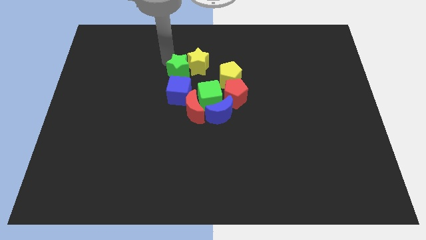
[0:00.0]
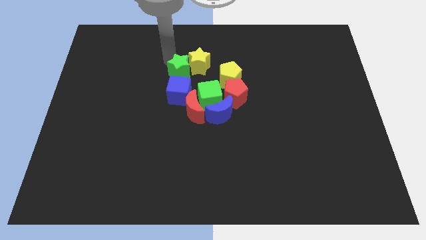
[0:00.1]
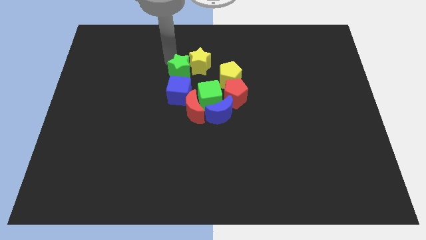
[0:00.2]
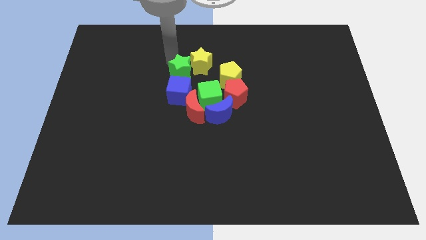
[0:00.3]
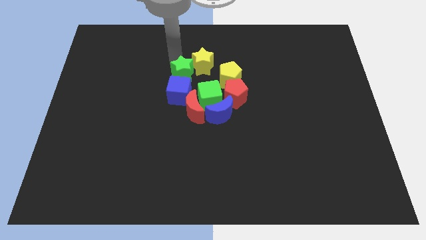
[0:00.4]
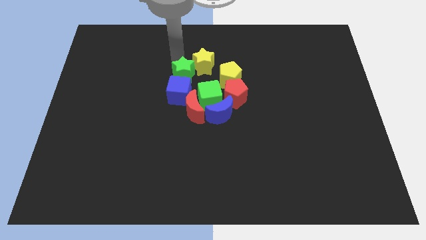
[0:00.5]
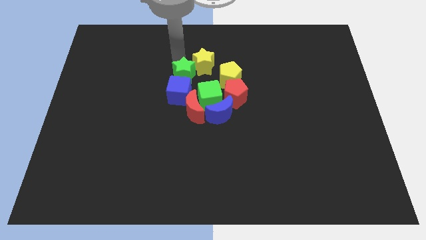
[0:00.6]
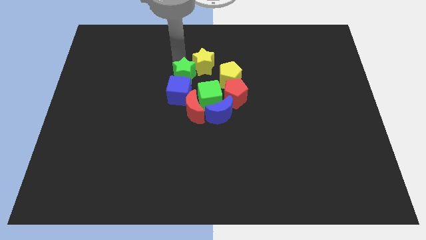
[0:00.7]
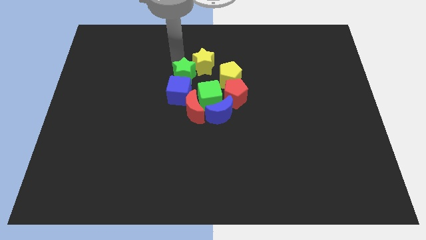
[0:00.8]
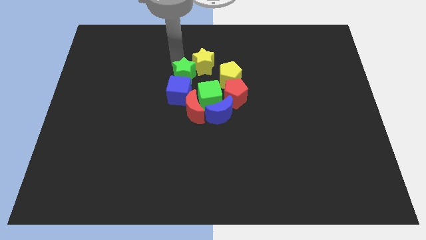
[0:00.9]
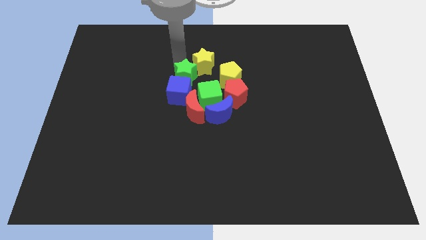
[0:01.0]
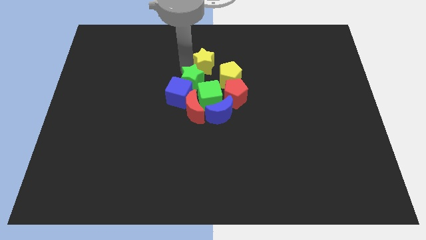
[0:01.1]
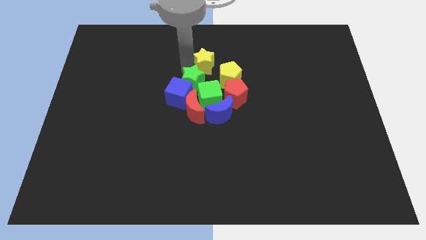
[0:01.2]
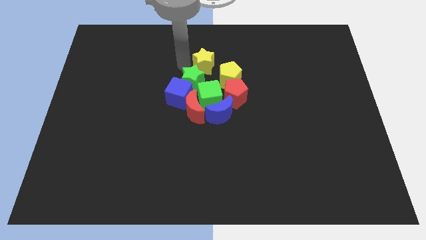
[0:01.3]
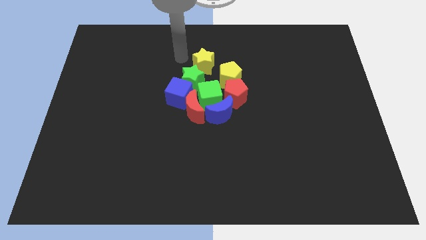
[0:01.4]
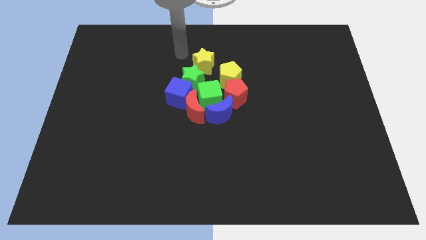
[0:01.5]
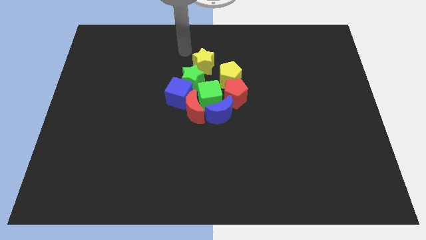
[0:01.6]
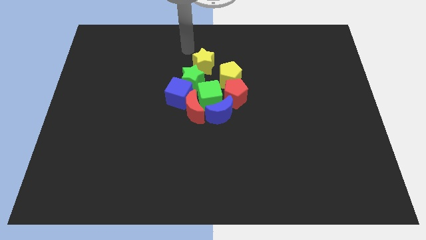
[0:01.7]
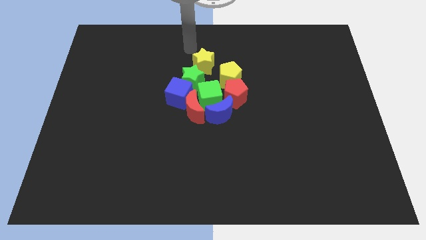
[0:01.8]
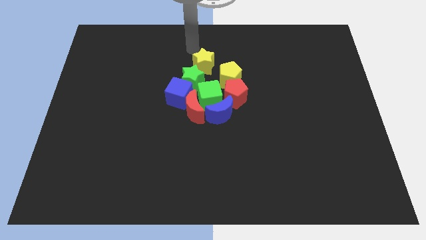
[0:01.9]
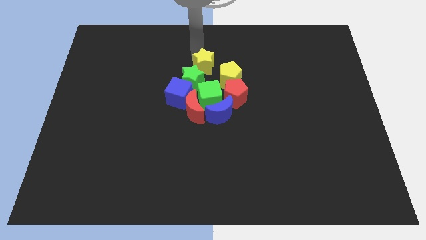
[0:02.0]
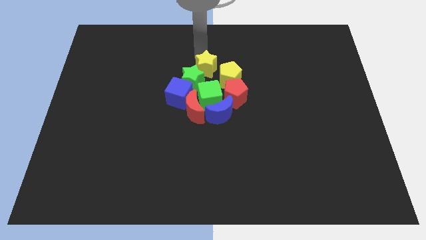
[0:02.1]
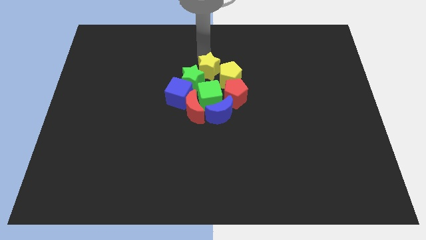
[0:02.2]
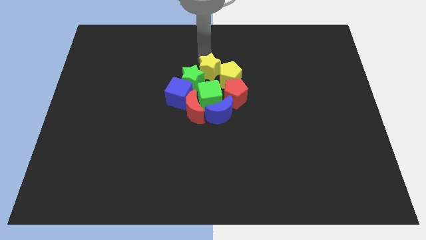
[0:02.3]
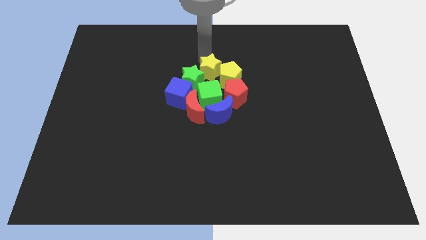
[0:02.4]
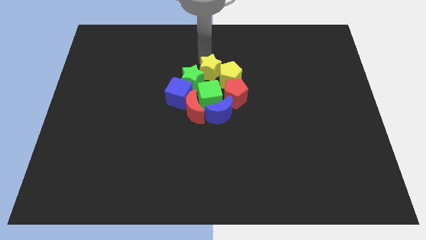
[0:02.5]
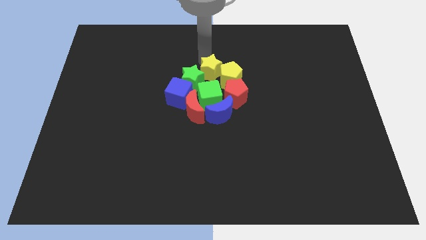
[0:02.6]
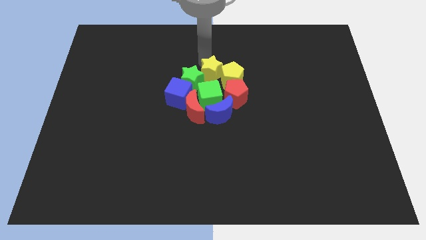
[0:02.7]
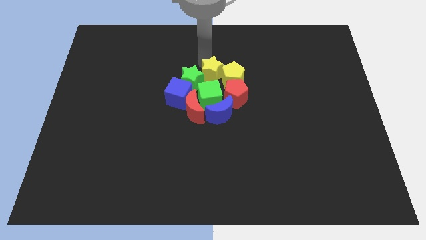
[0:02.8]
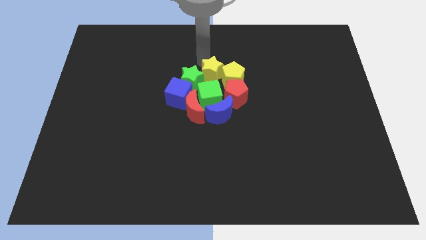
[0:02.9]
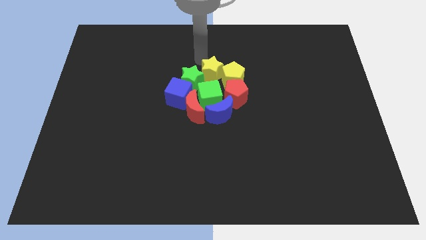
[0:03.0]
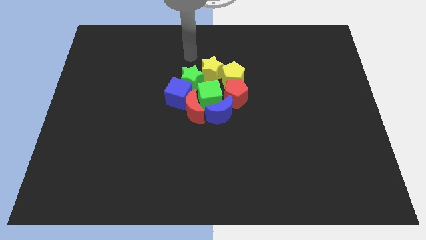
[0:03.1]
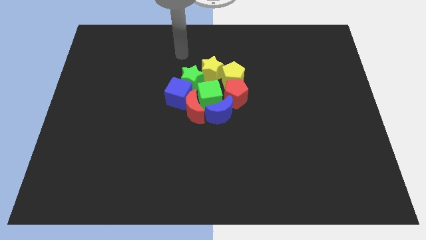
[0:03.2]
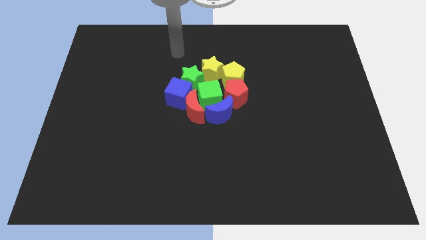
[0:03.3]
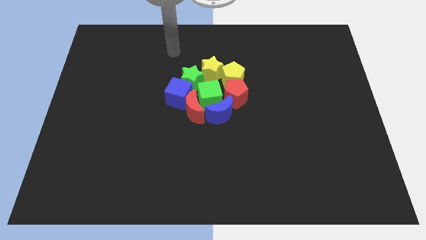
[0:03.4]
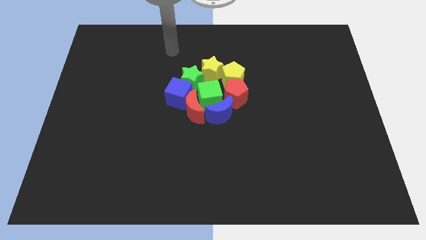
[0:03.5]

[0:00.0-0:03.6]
push yellow star between green staryellow pentagon

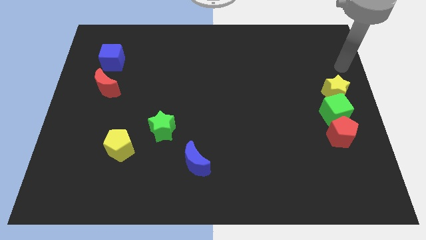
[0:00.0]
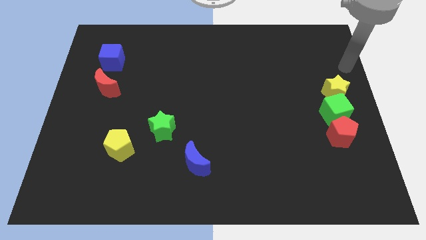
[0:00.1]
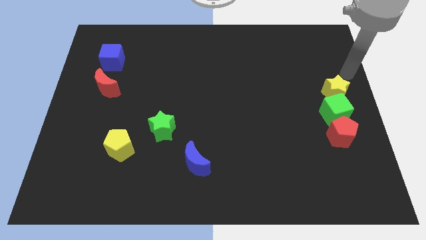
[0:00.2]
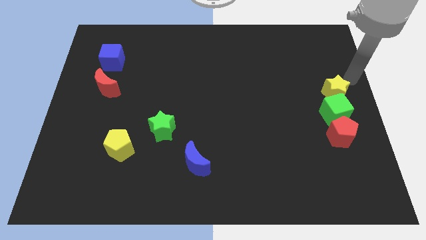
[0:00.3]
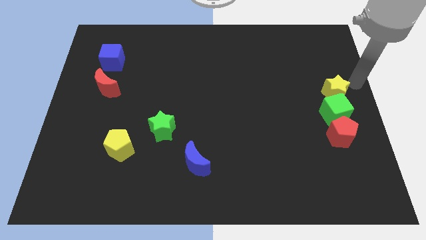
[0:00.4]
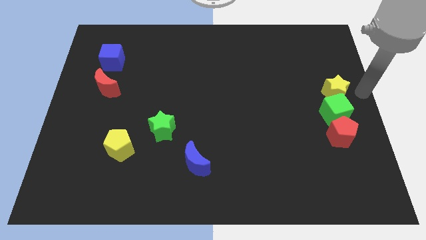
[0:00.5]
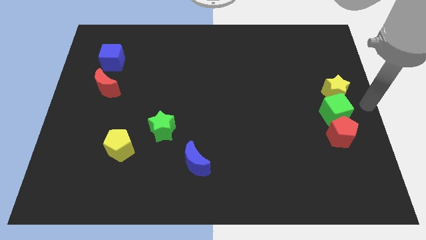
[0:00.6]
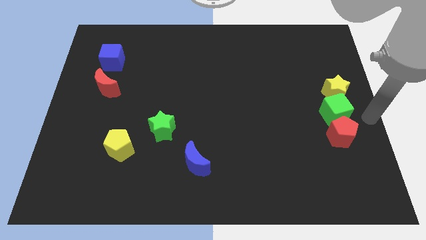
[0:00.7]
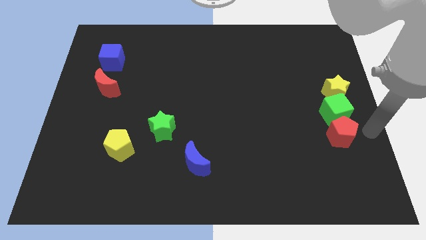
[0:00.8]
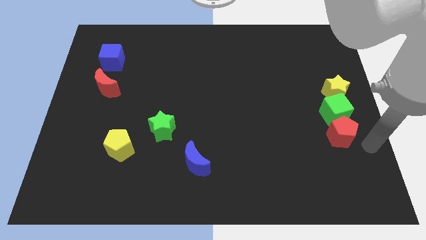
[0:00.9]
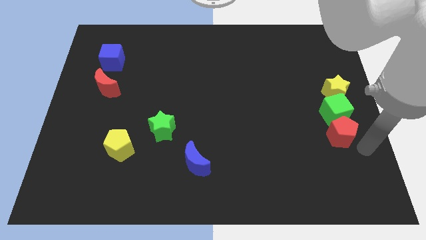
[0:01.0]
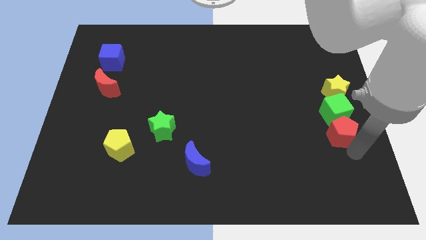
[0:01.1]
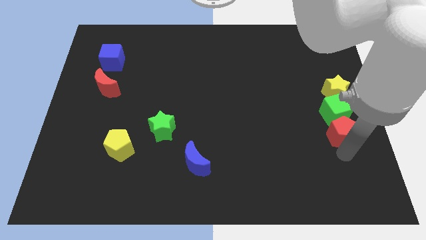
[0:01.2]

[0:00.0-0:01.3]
place your arm at the bottom of red pentagon

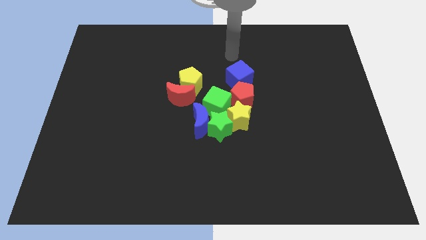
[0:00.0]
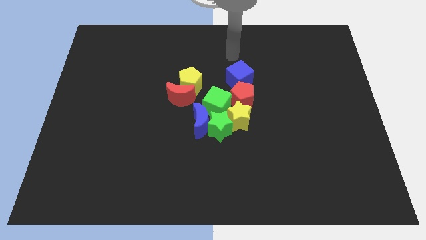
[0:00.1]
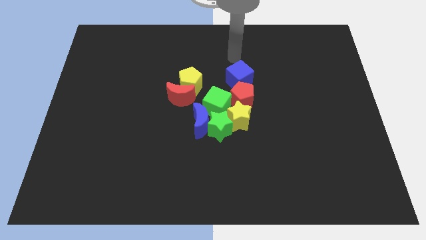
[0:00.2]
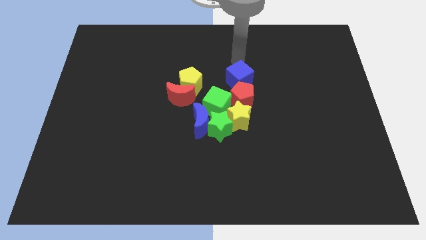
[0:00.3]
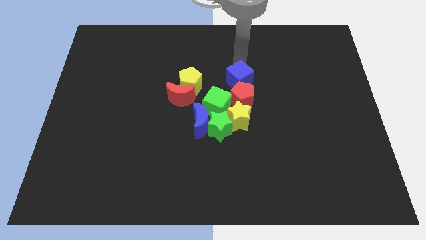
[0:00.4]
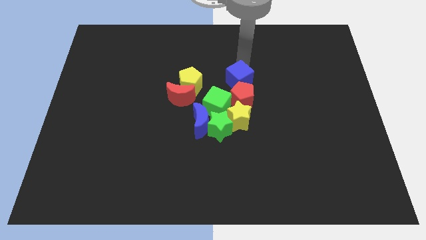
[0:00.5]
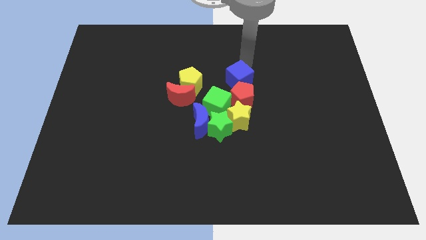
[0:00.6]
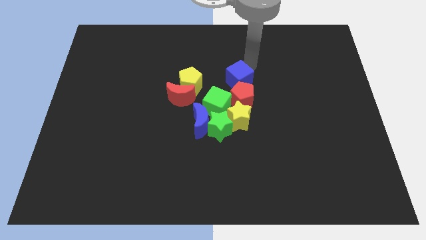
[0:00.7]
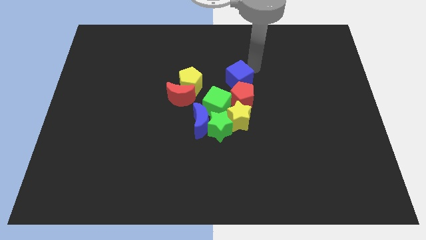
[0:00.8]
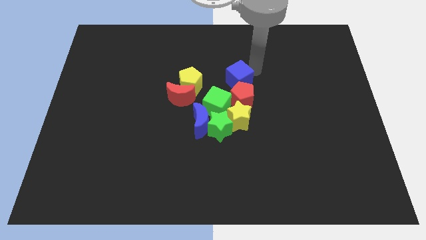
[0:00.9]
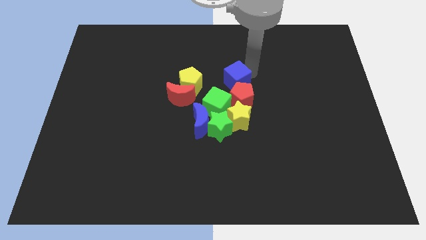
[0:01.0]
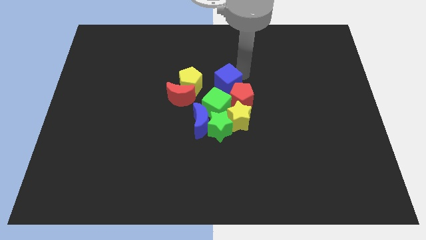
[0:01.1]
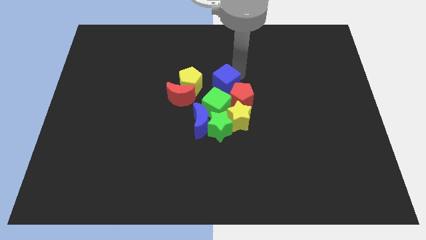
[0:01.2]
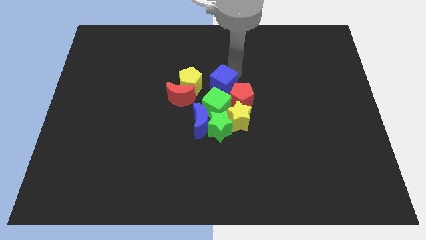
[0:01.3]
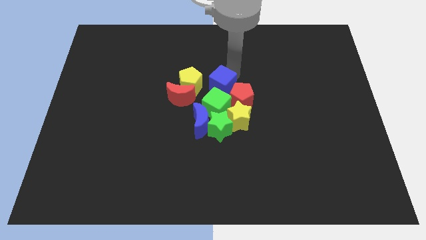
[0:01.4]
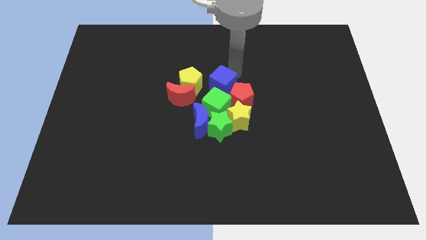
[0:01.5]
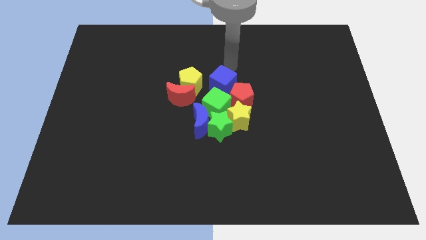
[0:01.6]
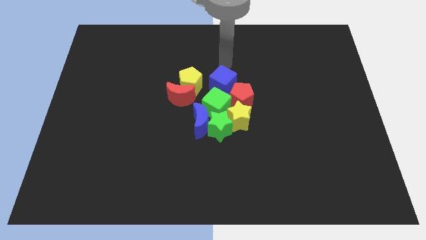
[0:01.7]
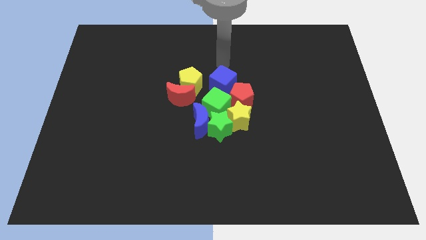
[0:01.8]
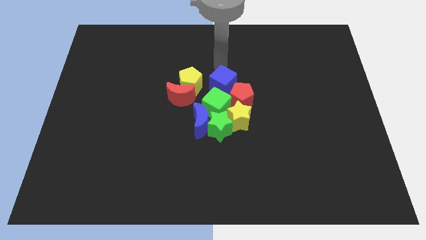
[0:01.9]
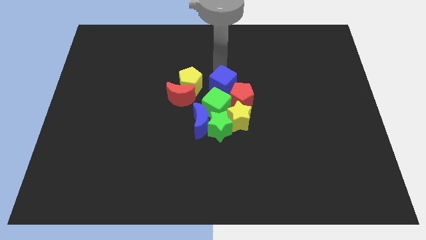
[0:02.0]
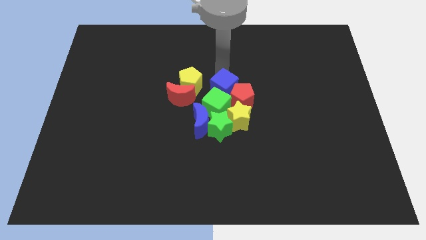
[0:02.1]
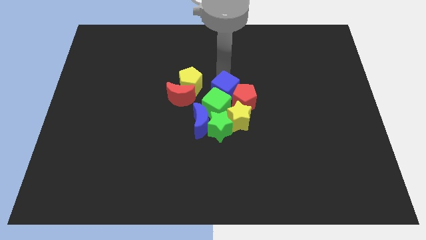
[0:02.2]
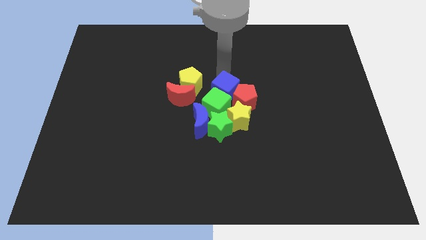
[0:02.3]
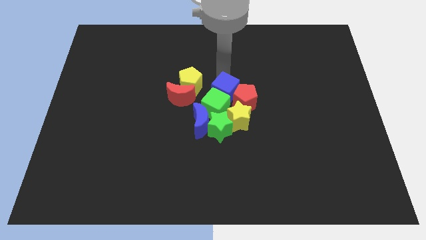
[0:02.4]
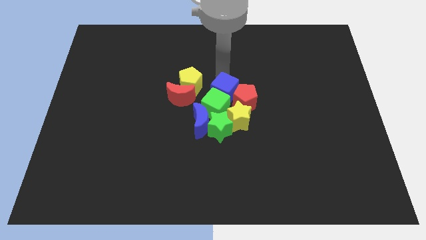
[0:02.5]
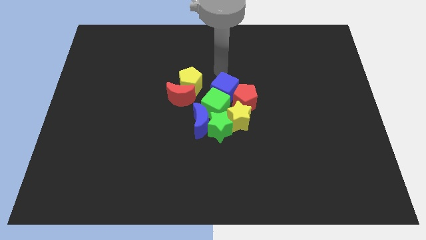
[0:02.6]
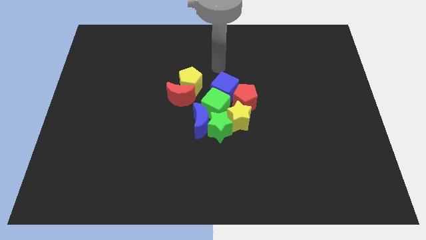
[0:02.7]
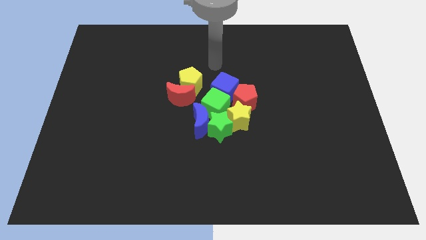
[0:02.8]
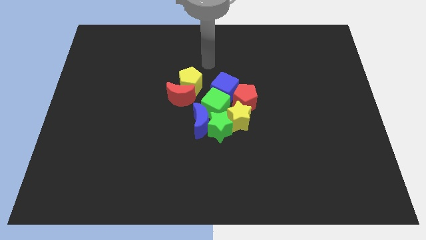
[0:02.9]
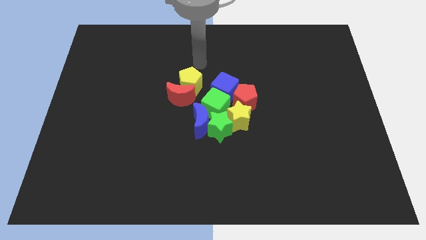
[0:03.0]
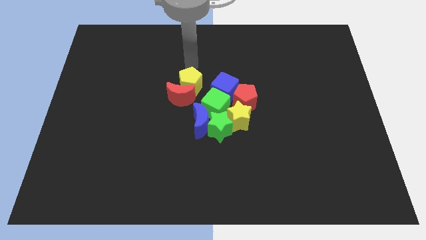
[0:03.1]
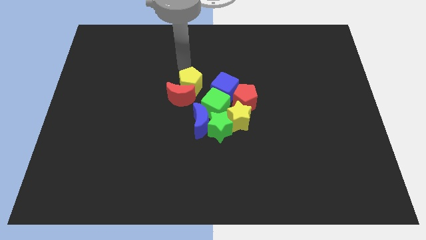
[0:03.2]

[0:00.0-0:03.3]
move the blue cube to the top right side of the green cube

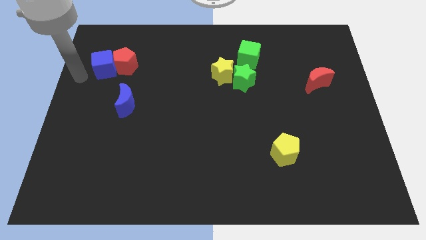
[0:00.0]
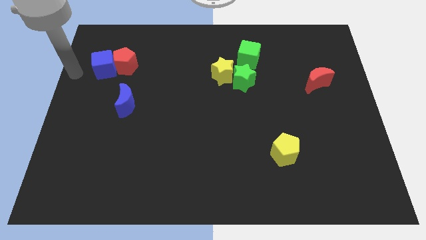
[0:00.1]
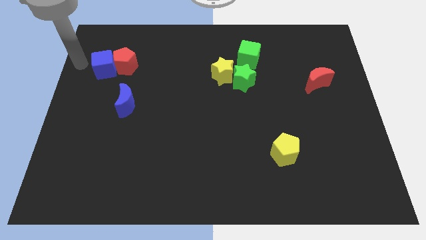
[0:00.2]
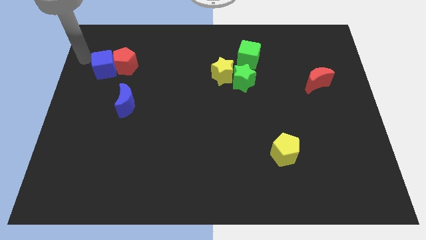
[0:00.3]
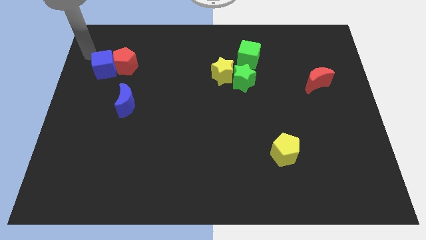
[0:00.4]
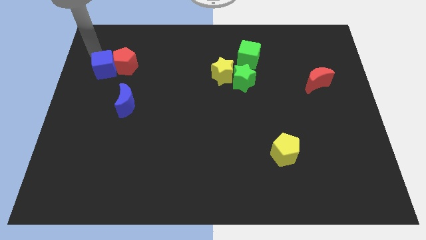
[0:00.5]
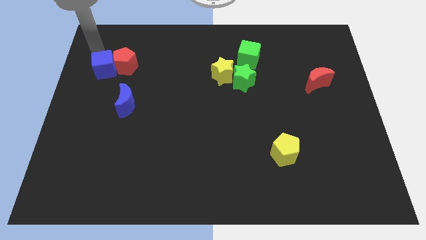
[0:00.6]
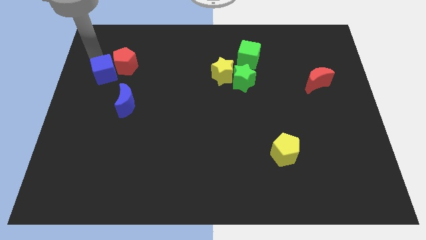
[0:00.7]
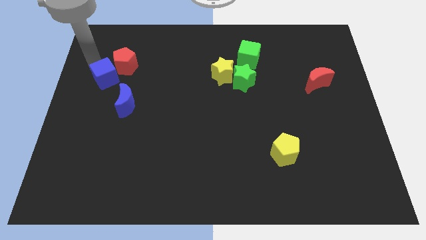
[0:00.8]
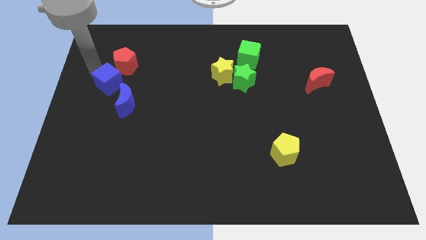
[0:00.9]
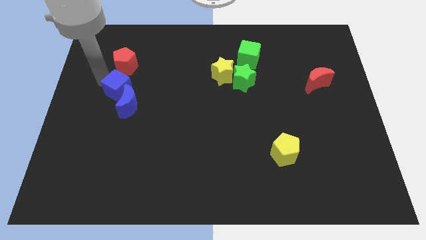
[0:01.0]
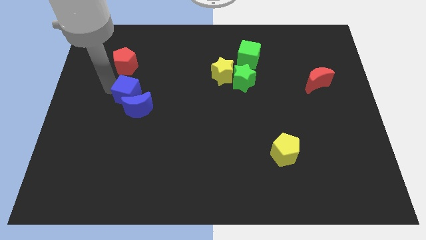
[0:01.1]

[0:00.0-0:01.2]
separate the blue cube from the red pentagon
